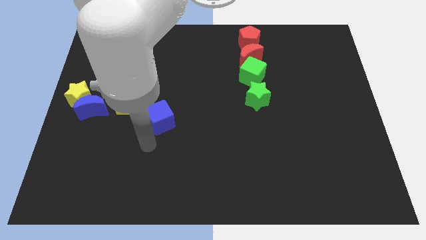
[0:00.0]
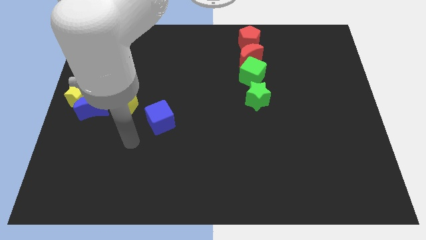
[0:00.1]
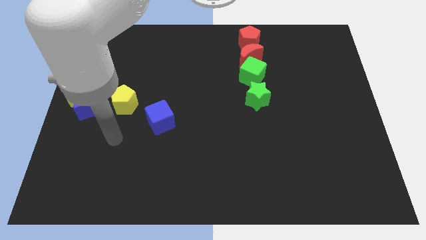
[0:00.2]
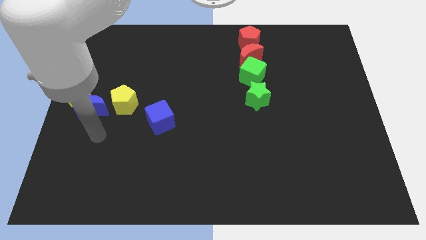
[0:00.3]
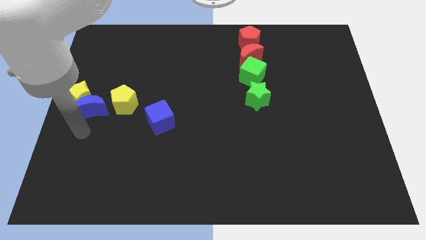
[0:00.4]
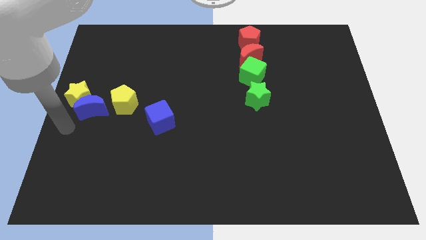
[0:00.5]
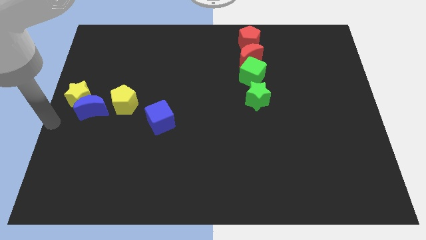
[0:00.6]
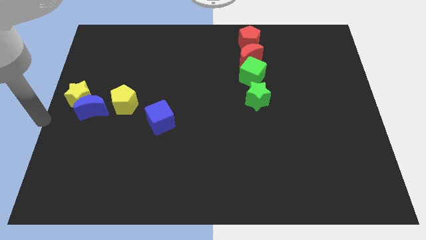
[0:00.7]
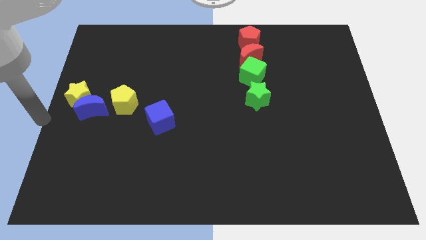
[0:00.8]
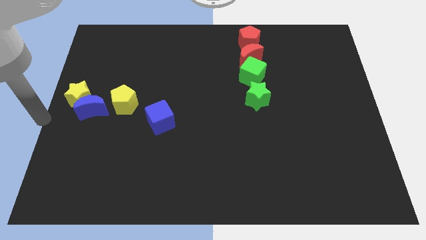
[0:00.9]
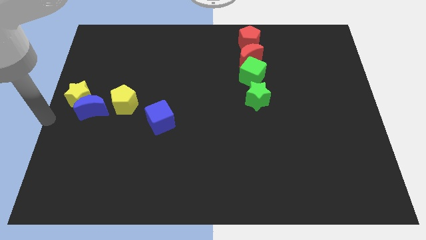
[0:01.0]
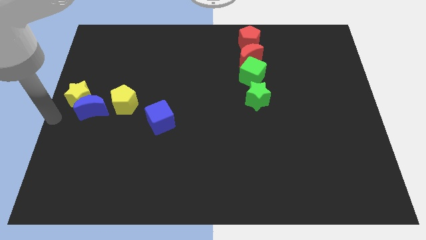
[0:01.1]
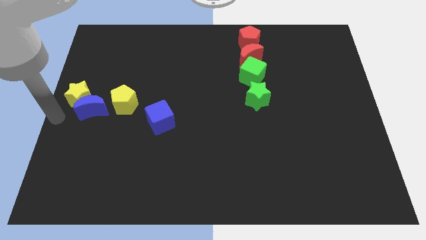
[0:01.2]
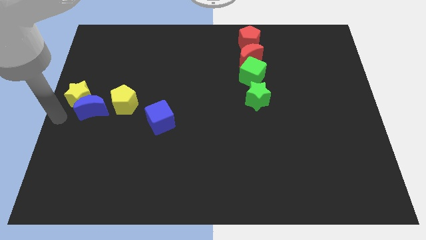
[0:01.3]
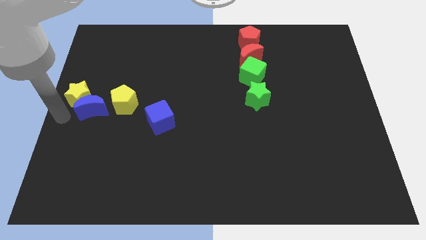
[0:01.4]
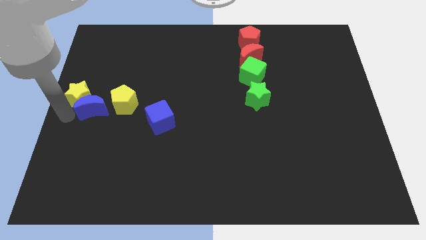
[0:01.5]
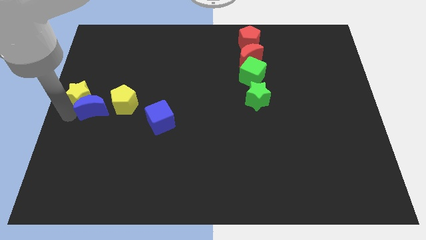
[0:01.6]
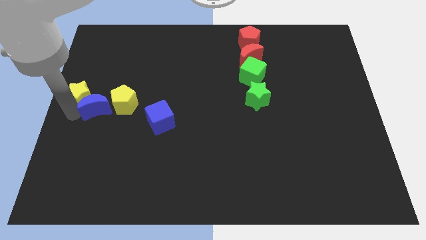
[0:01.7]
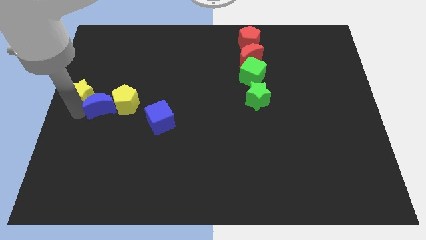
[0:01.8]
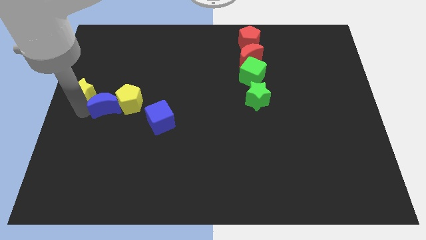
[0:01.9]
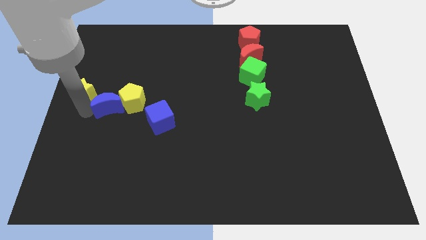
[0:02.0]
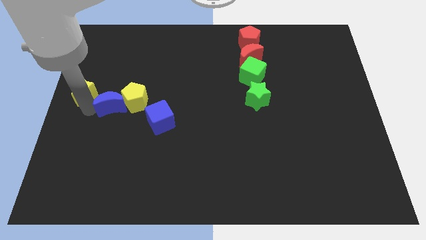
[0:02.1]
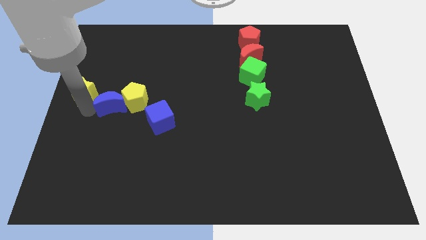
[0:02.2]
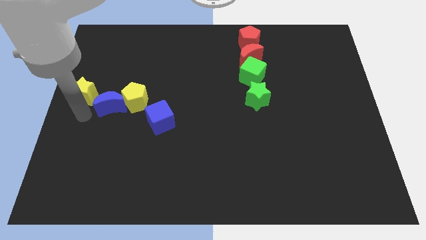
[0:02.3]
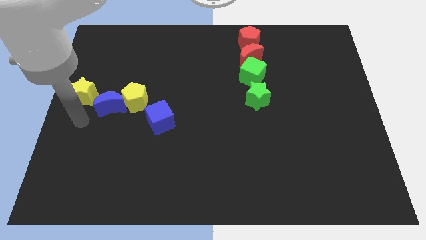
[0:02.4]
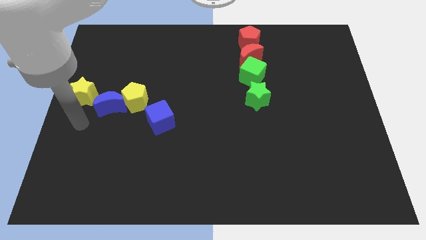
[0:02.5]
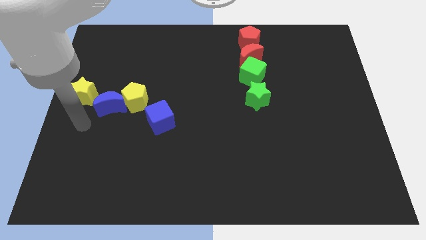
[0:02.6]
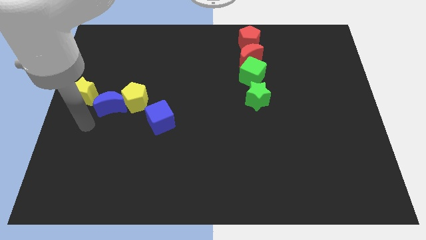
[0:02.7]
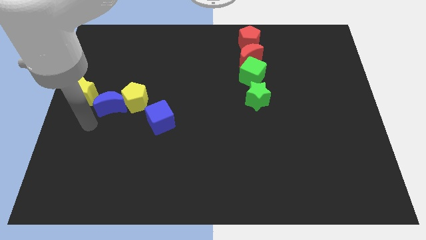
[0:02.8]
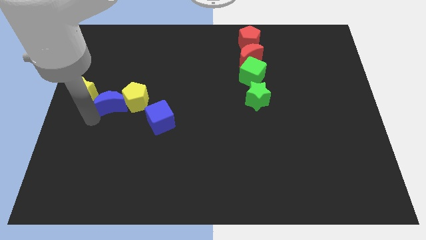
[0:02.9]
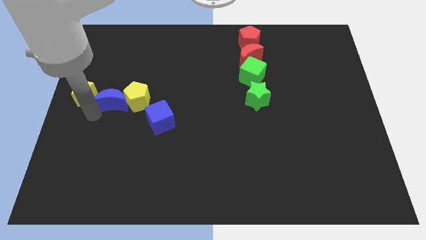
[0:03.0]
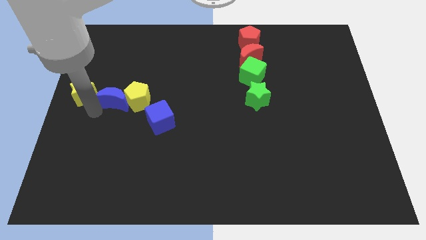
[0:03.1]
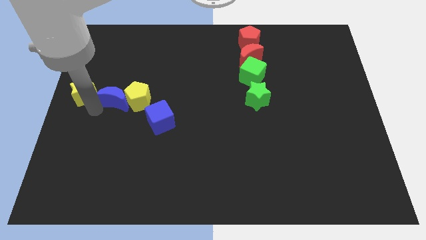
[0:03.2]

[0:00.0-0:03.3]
place the blue moon in between yellow pentagon and yellow star

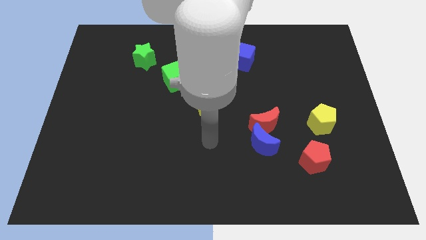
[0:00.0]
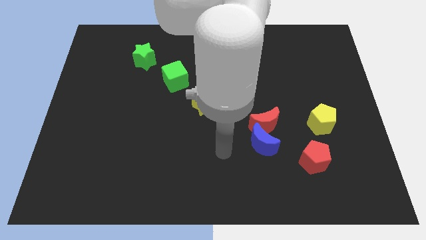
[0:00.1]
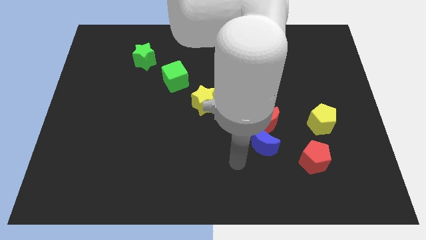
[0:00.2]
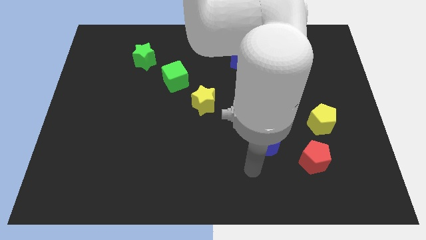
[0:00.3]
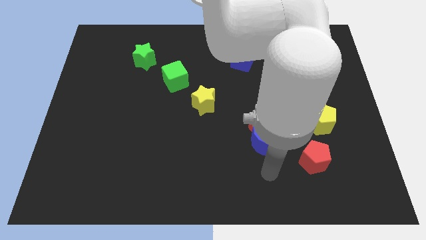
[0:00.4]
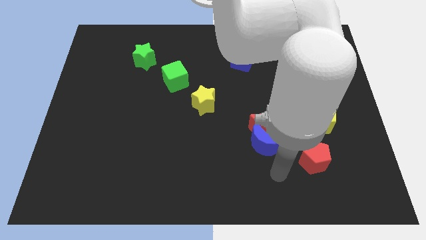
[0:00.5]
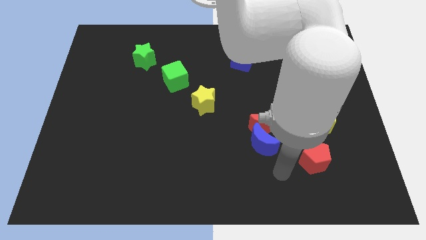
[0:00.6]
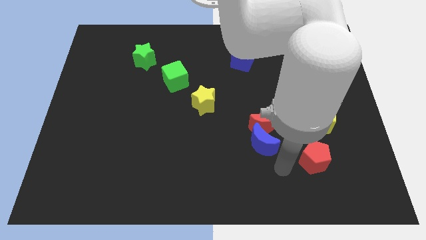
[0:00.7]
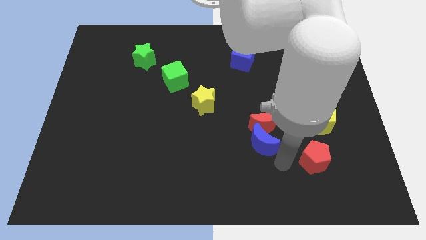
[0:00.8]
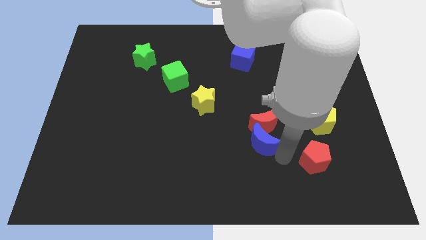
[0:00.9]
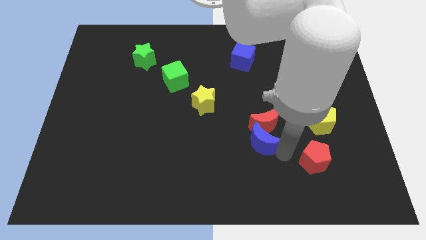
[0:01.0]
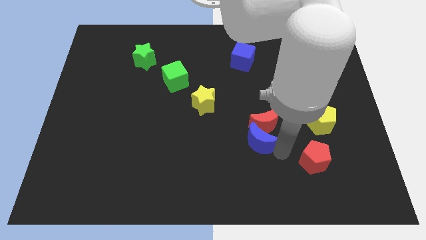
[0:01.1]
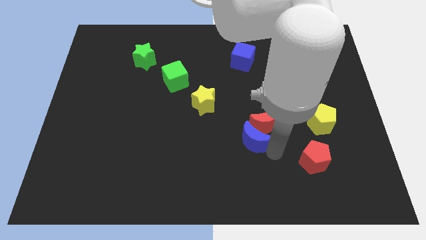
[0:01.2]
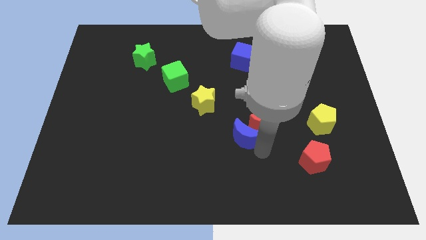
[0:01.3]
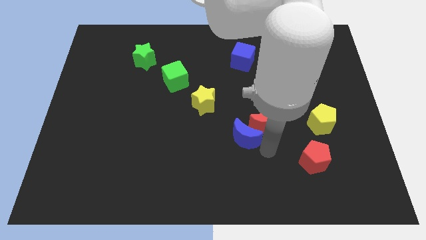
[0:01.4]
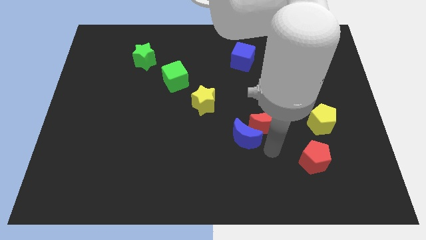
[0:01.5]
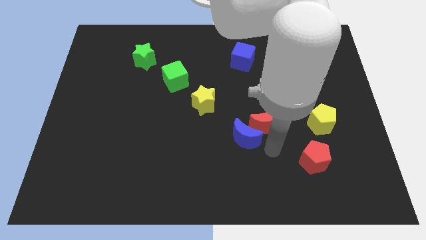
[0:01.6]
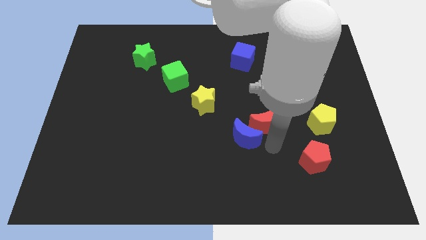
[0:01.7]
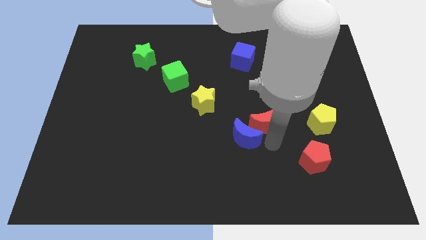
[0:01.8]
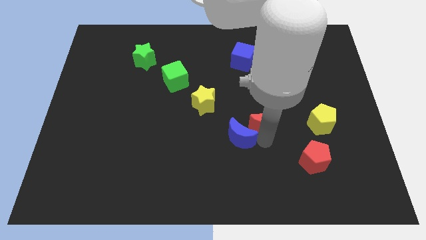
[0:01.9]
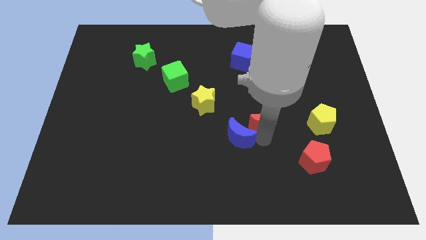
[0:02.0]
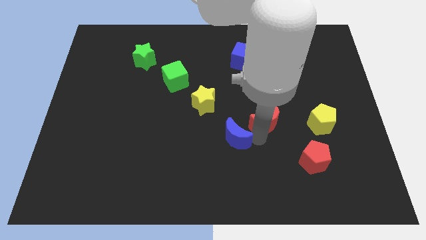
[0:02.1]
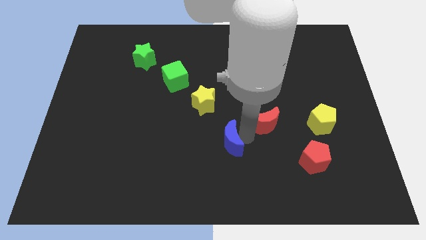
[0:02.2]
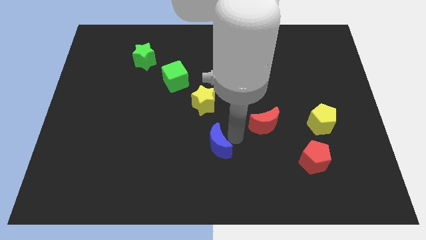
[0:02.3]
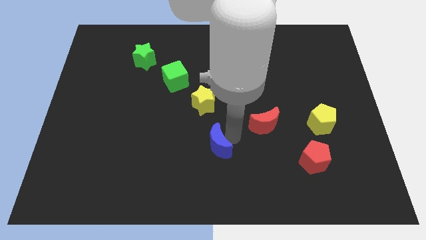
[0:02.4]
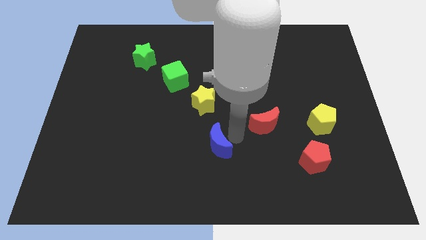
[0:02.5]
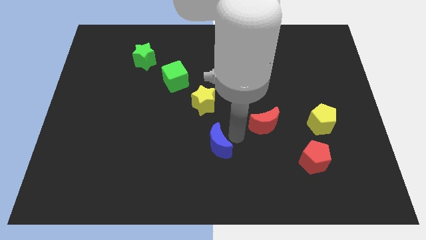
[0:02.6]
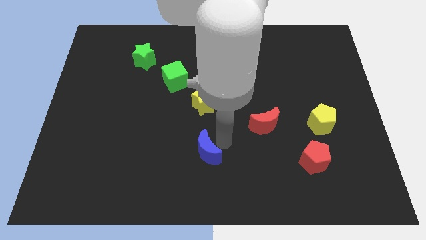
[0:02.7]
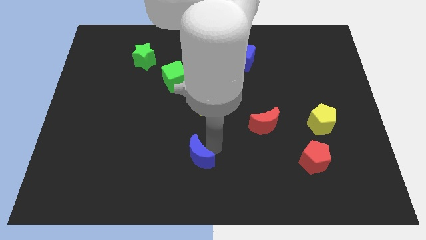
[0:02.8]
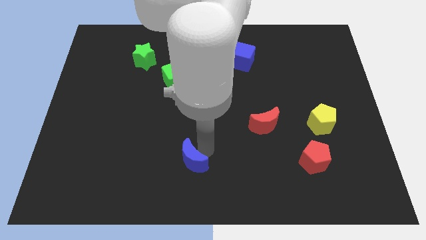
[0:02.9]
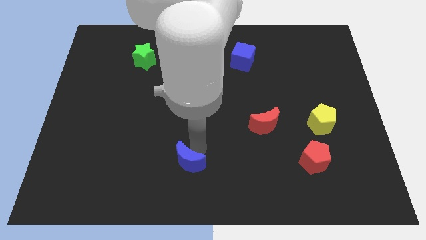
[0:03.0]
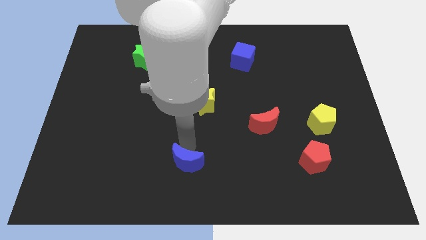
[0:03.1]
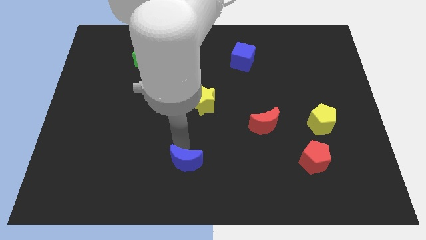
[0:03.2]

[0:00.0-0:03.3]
move the blue crescent to the bottom of the yellow star

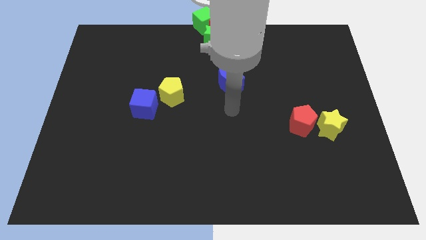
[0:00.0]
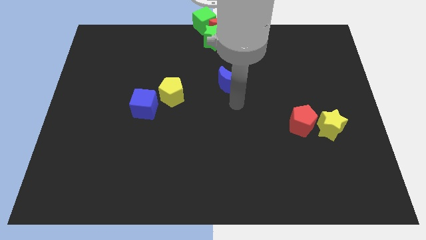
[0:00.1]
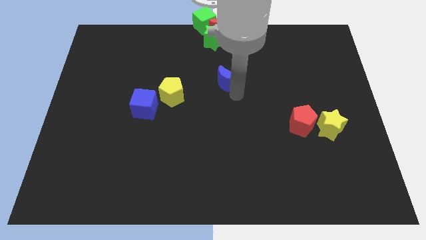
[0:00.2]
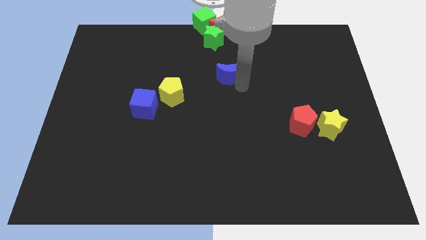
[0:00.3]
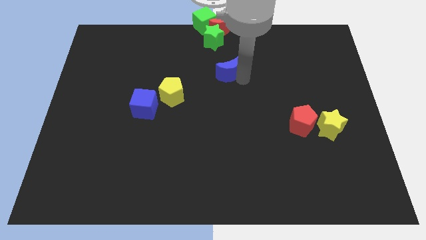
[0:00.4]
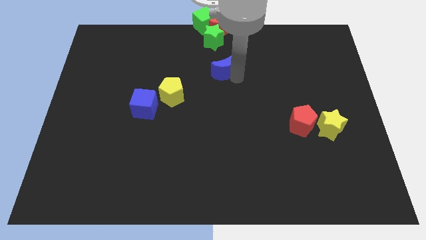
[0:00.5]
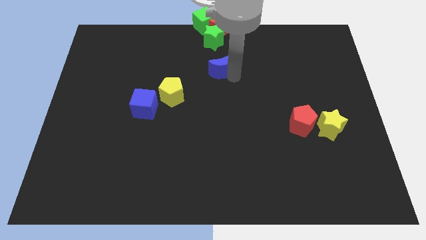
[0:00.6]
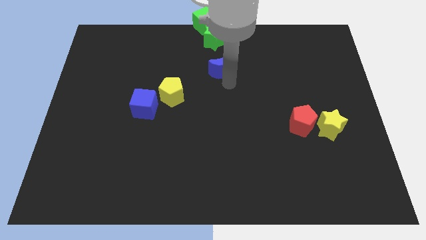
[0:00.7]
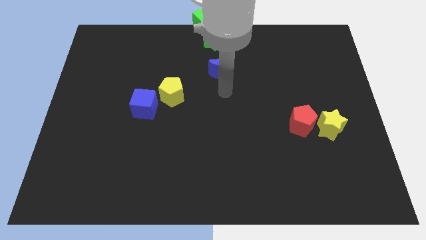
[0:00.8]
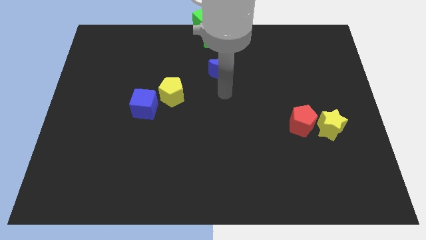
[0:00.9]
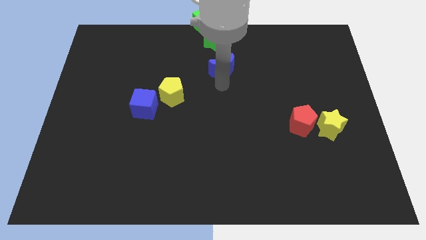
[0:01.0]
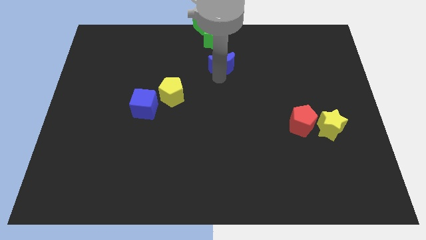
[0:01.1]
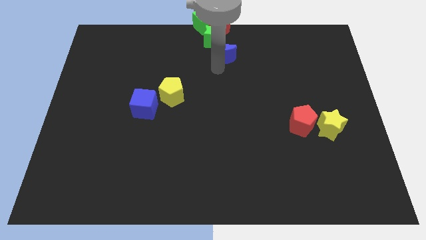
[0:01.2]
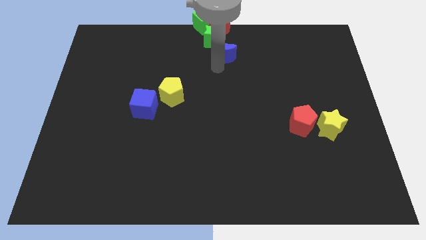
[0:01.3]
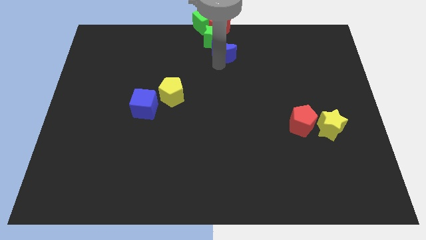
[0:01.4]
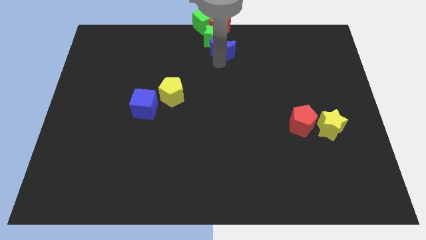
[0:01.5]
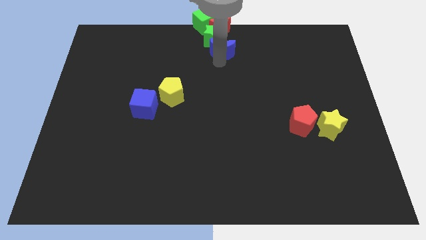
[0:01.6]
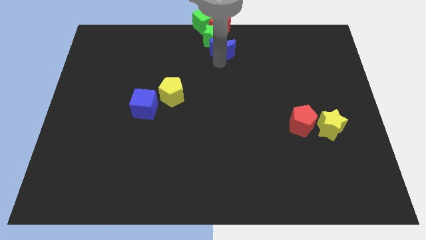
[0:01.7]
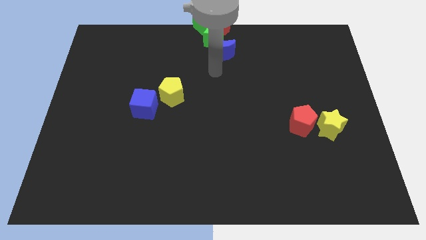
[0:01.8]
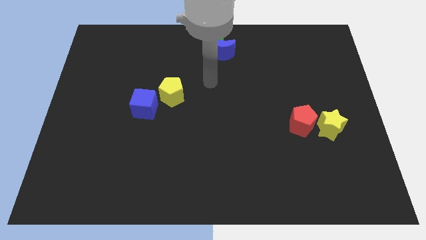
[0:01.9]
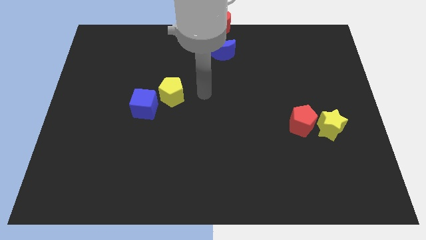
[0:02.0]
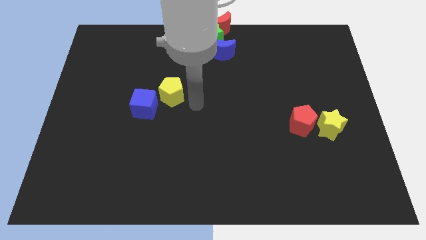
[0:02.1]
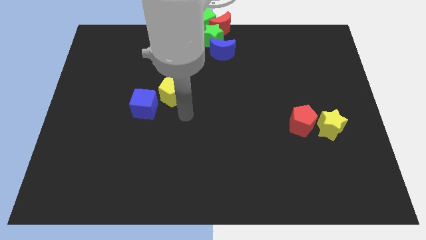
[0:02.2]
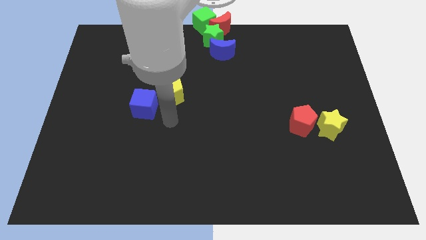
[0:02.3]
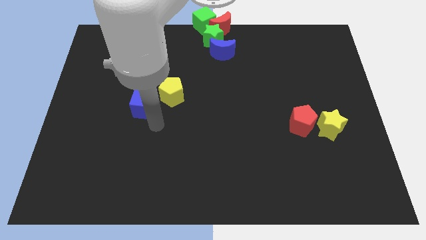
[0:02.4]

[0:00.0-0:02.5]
move the blue moon into the green star
